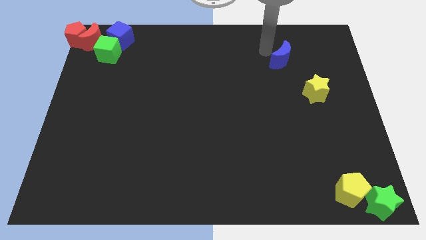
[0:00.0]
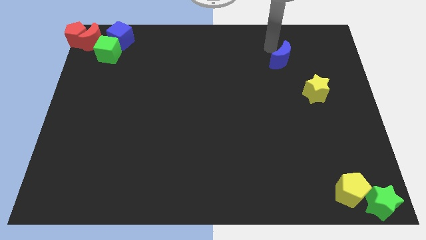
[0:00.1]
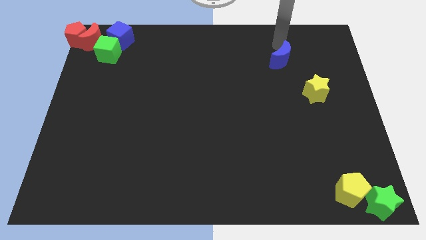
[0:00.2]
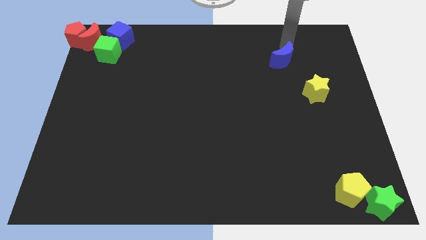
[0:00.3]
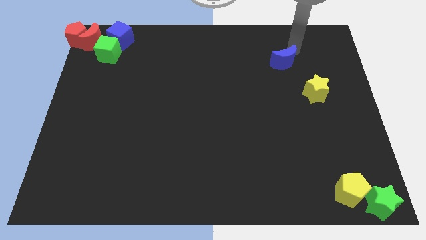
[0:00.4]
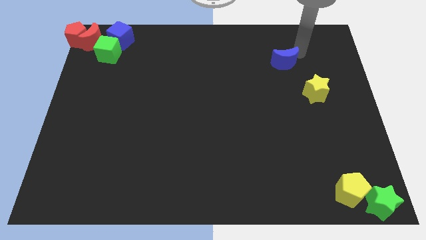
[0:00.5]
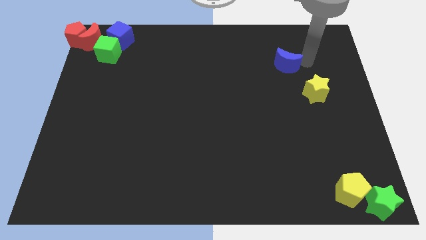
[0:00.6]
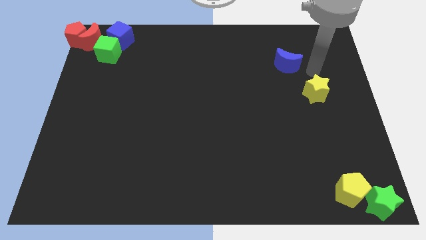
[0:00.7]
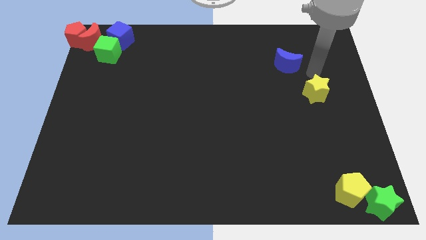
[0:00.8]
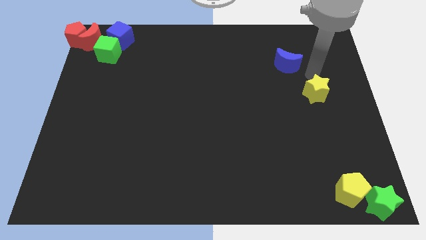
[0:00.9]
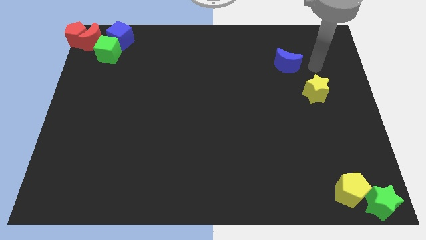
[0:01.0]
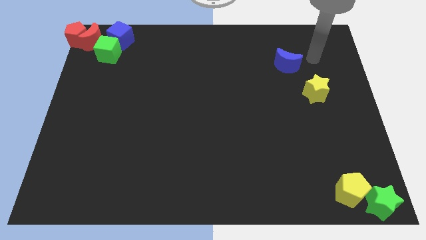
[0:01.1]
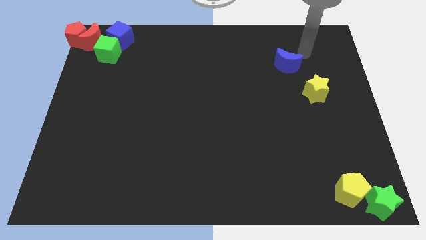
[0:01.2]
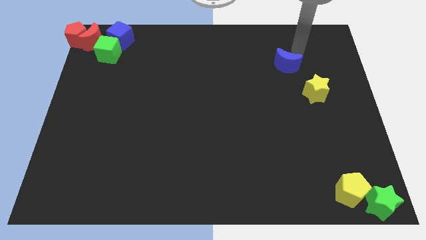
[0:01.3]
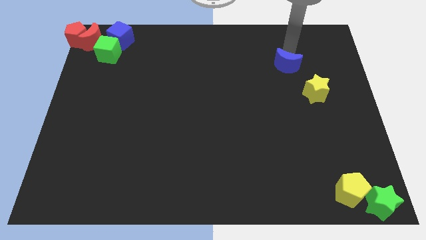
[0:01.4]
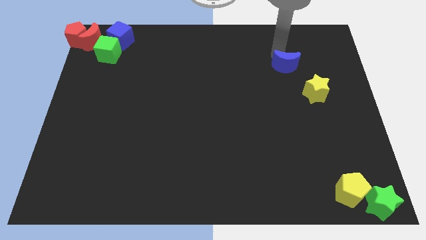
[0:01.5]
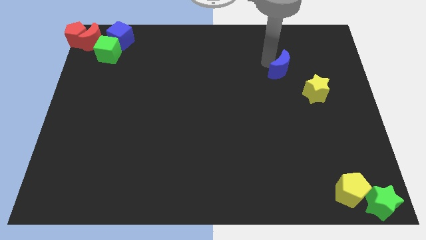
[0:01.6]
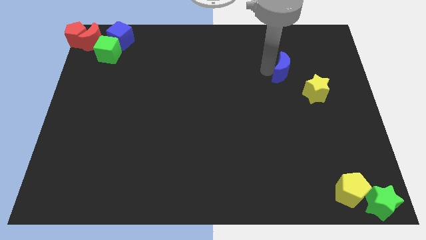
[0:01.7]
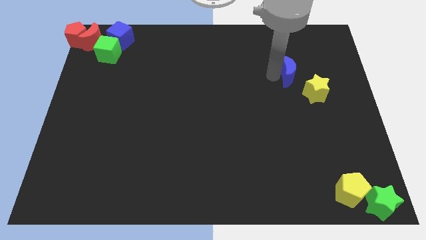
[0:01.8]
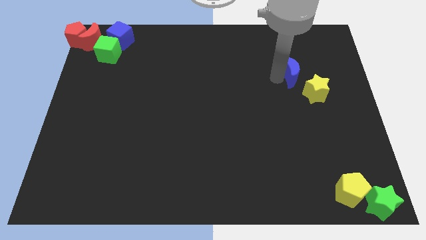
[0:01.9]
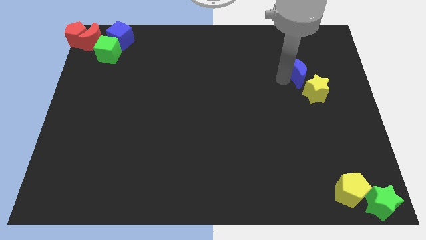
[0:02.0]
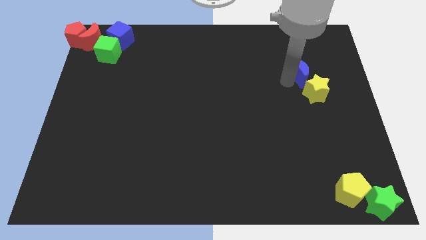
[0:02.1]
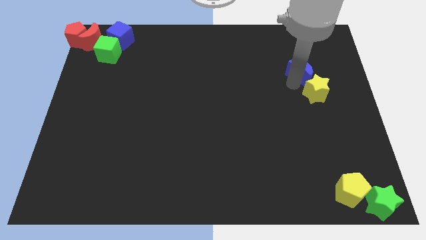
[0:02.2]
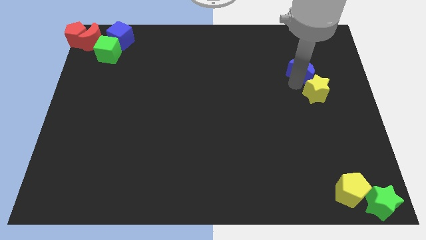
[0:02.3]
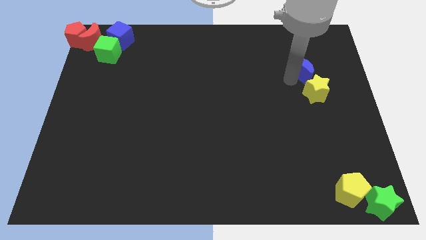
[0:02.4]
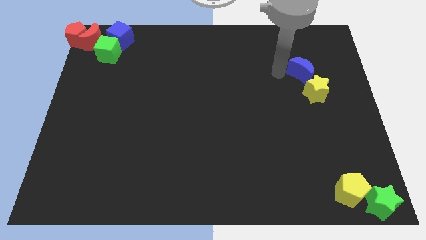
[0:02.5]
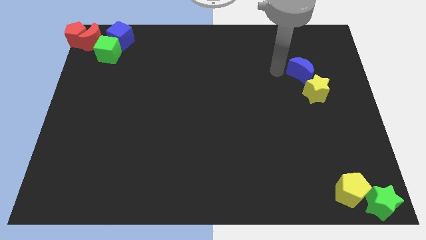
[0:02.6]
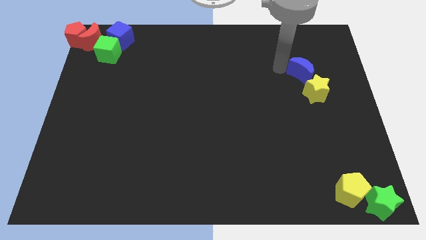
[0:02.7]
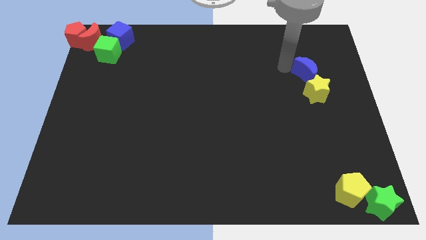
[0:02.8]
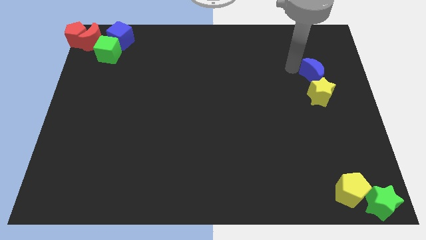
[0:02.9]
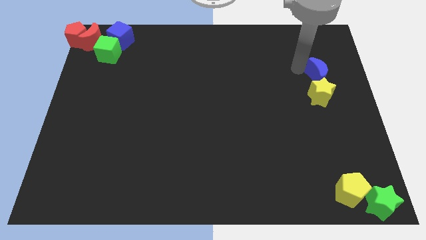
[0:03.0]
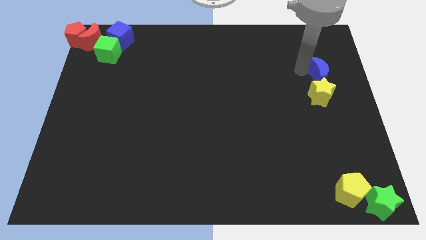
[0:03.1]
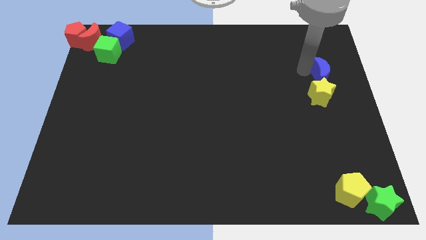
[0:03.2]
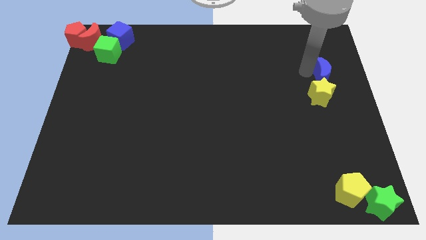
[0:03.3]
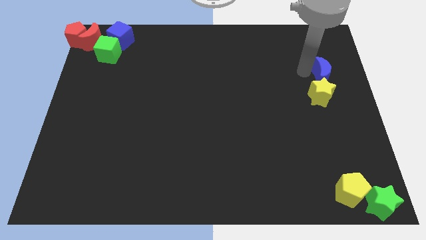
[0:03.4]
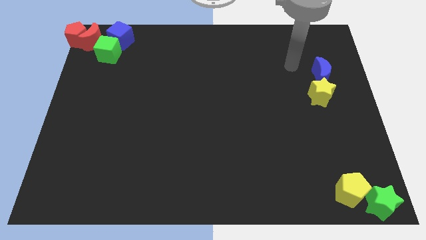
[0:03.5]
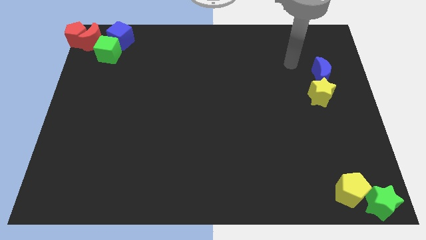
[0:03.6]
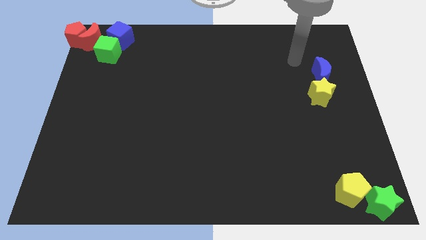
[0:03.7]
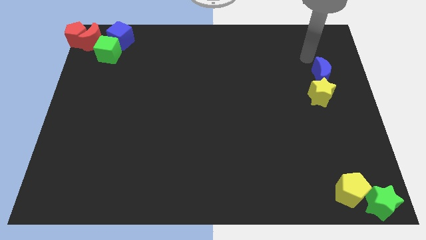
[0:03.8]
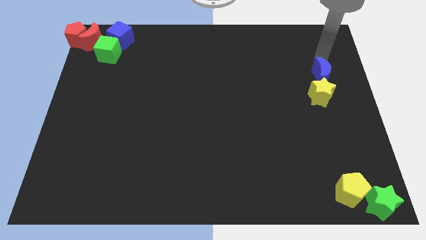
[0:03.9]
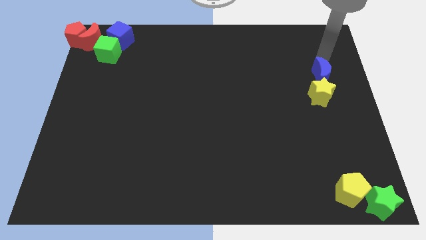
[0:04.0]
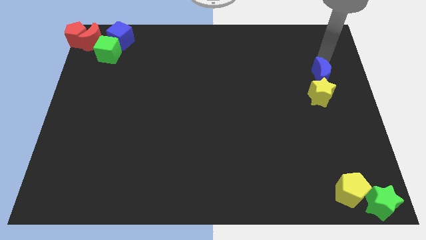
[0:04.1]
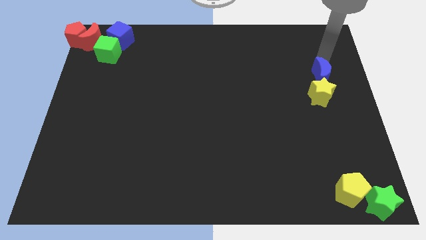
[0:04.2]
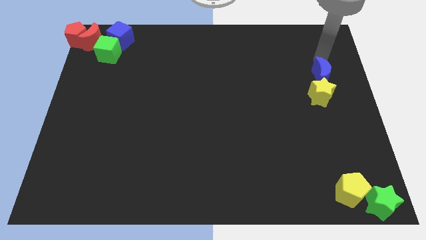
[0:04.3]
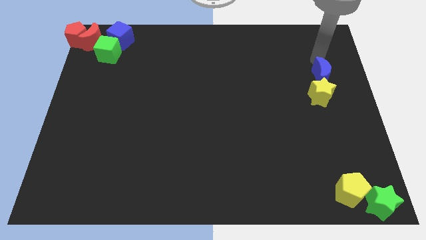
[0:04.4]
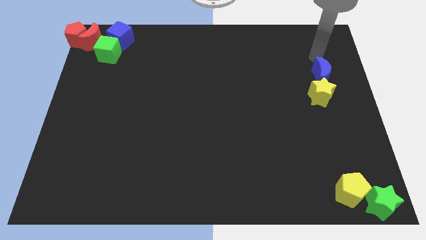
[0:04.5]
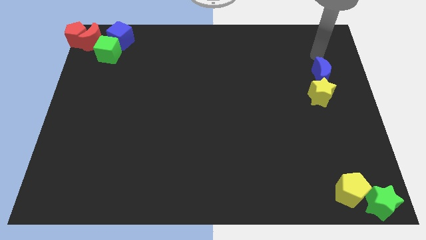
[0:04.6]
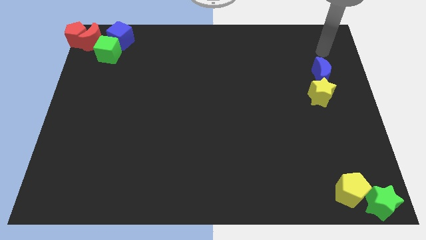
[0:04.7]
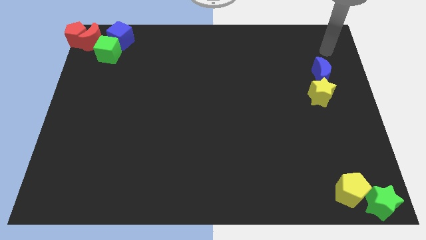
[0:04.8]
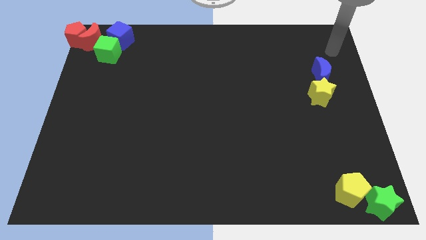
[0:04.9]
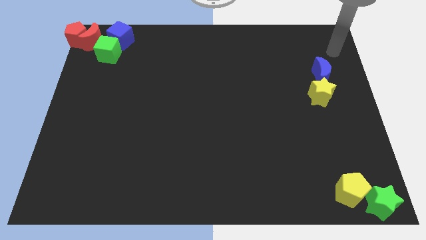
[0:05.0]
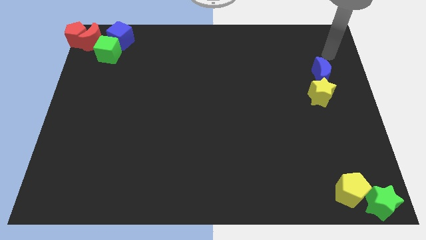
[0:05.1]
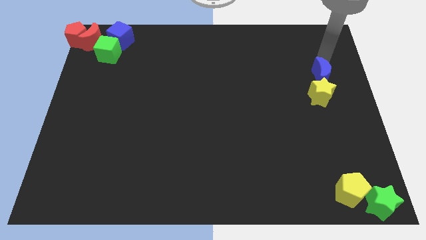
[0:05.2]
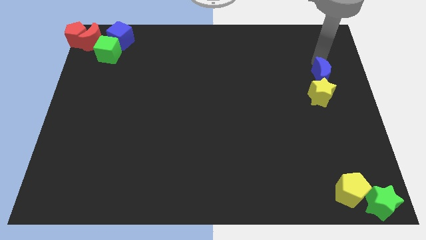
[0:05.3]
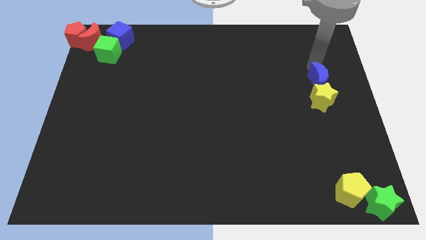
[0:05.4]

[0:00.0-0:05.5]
place the blue moon above the yellow star
